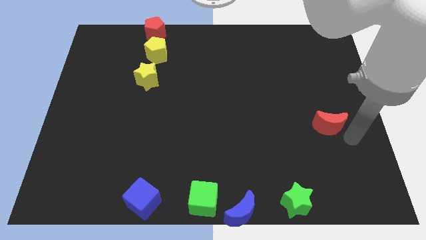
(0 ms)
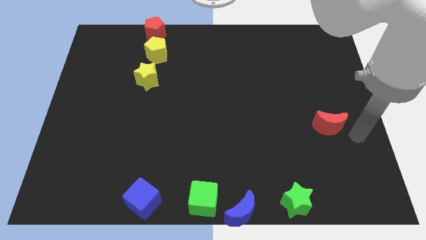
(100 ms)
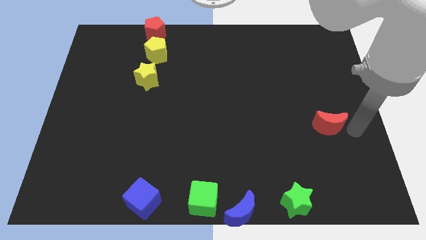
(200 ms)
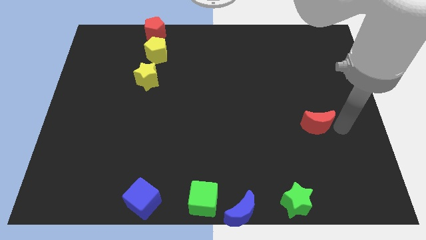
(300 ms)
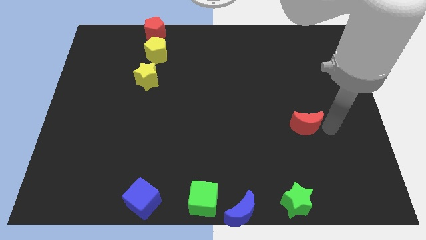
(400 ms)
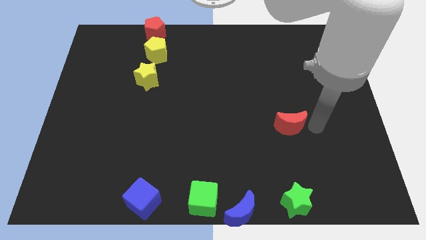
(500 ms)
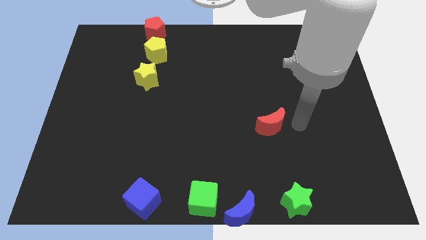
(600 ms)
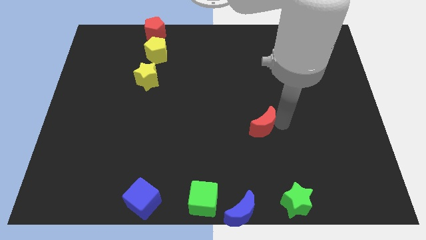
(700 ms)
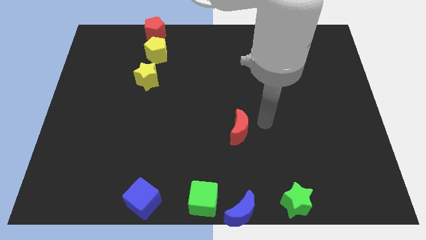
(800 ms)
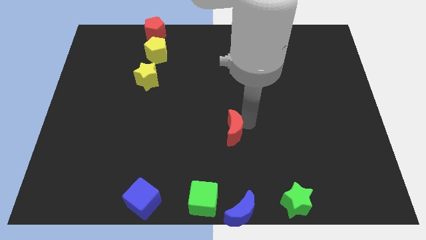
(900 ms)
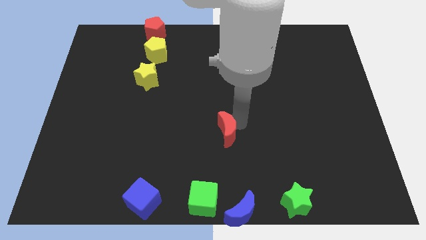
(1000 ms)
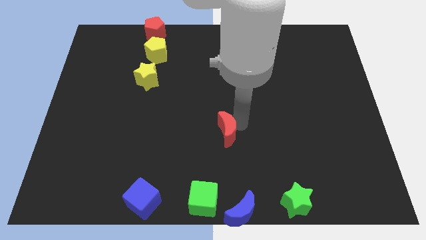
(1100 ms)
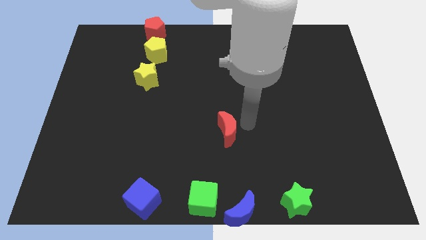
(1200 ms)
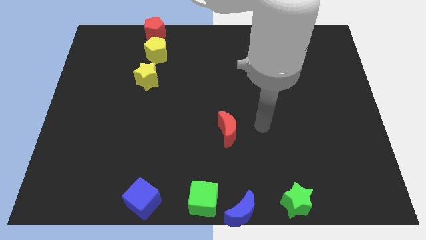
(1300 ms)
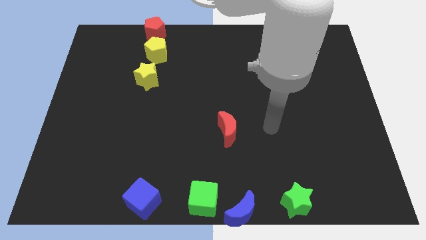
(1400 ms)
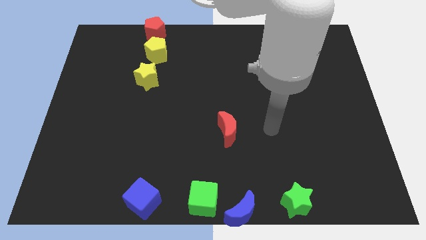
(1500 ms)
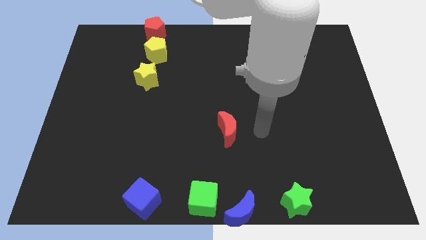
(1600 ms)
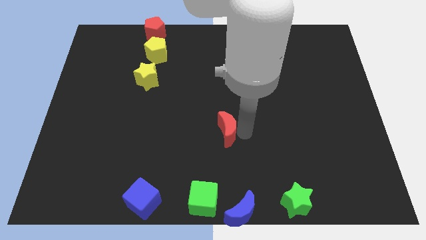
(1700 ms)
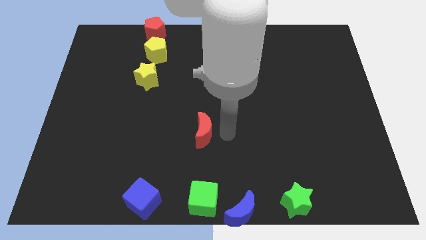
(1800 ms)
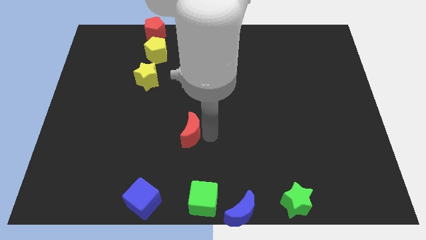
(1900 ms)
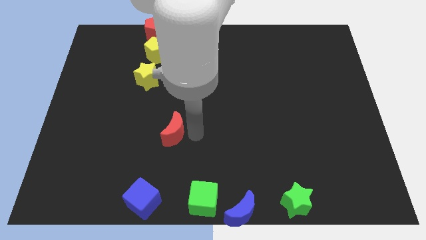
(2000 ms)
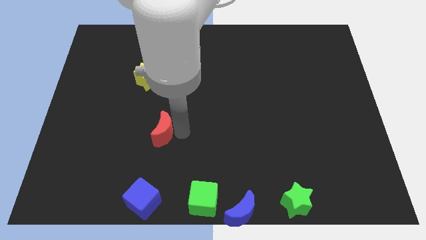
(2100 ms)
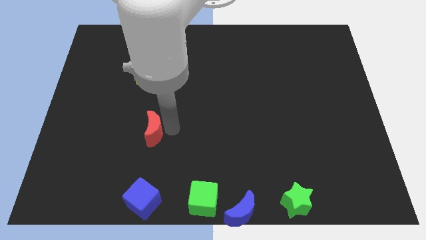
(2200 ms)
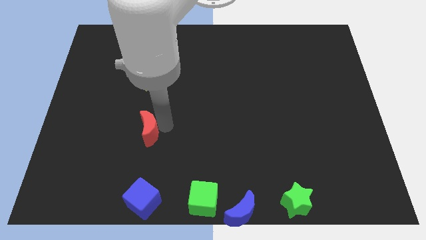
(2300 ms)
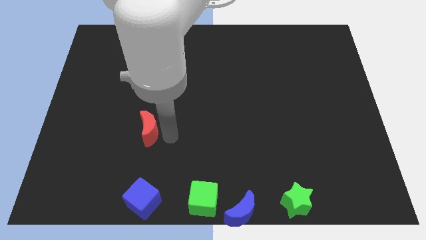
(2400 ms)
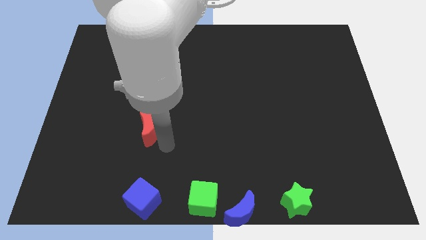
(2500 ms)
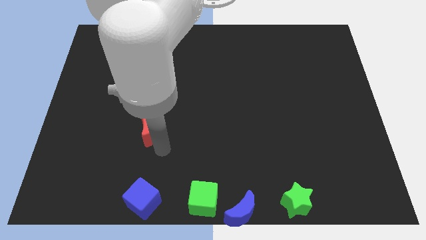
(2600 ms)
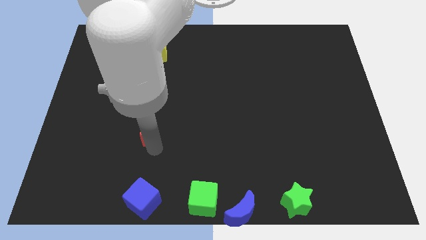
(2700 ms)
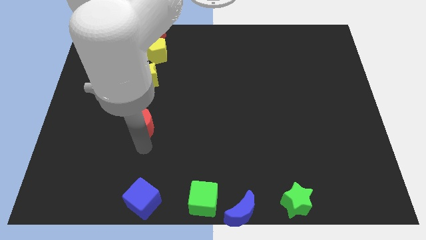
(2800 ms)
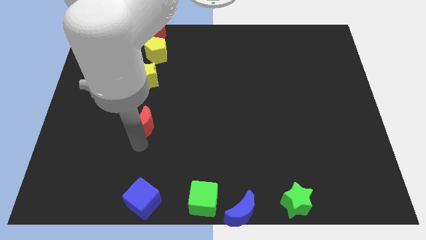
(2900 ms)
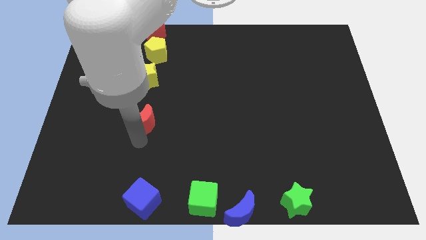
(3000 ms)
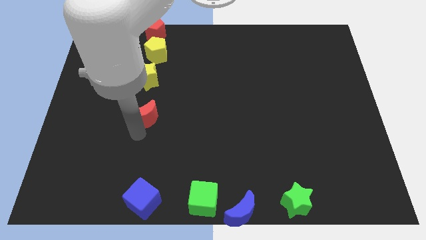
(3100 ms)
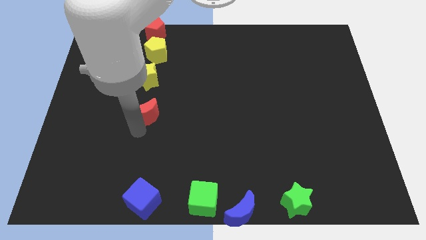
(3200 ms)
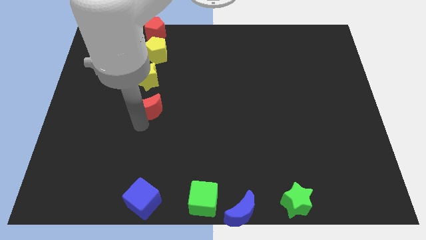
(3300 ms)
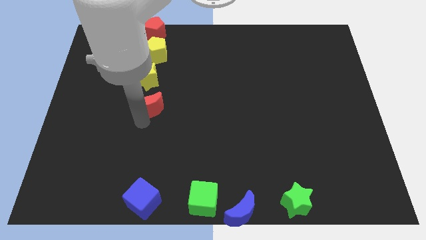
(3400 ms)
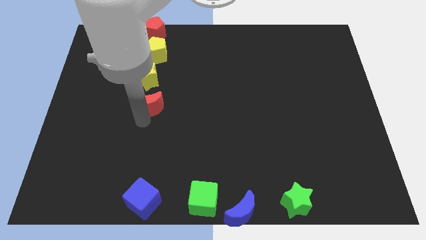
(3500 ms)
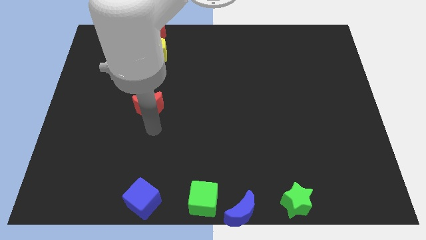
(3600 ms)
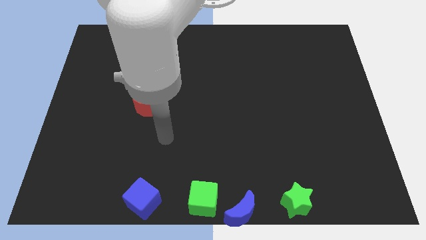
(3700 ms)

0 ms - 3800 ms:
move the red moon towards the bottom of yellow star

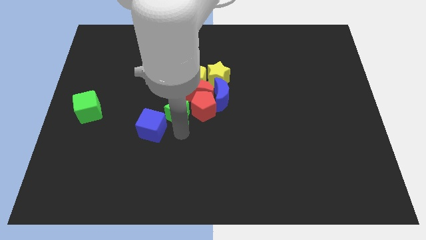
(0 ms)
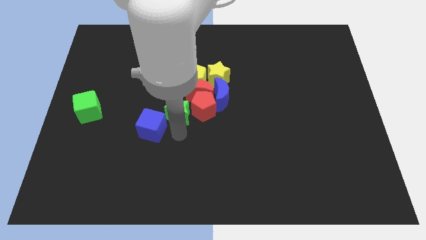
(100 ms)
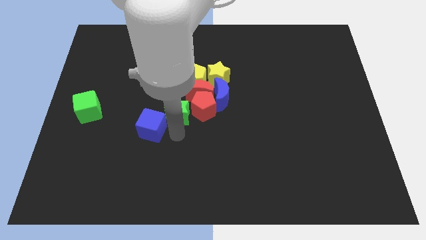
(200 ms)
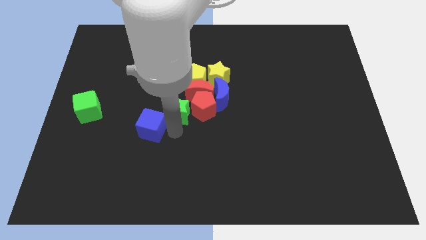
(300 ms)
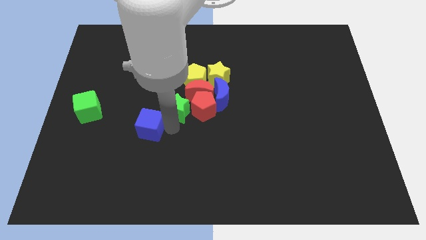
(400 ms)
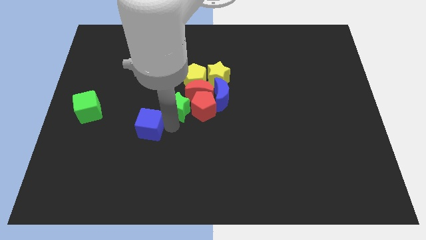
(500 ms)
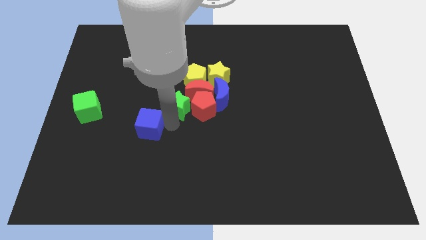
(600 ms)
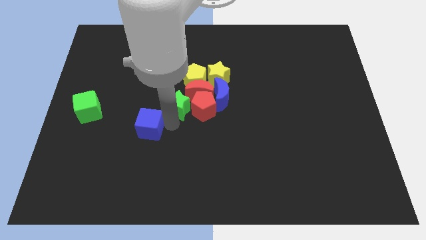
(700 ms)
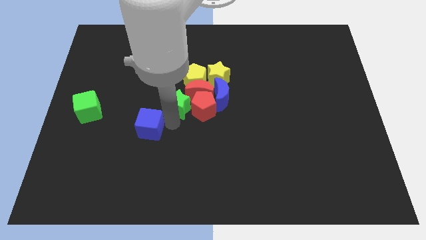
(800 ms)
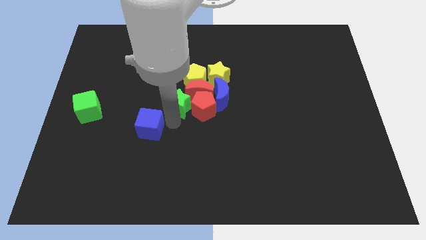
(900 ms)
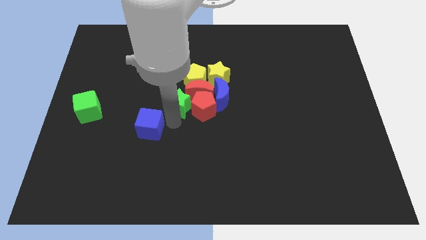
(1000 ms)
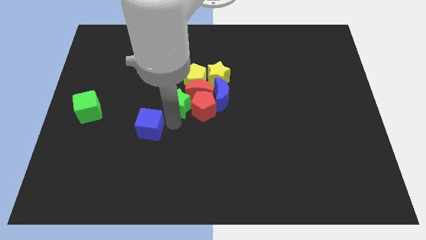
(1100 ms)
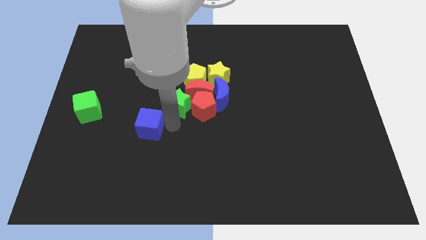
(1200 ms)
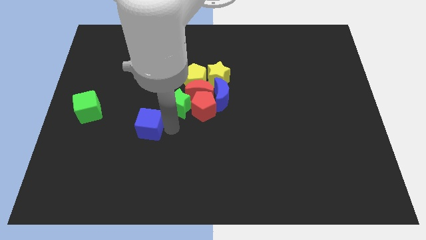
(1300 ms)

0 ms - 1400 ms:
place the green star to the left side of the red pentagon

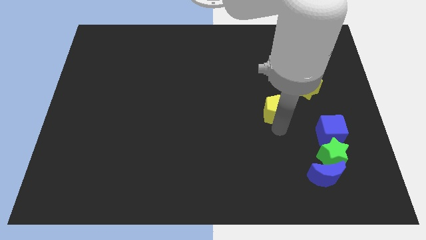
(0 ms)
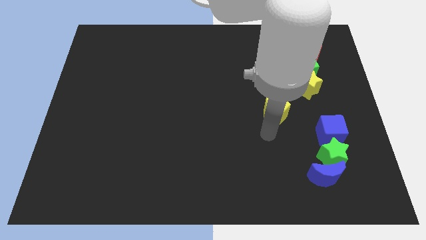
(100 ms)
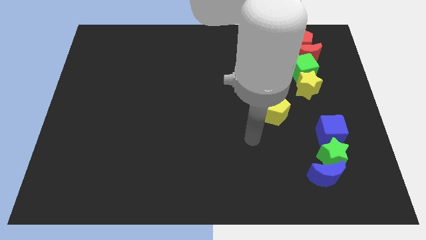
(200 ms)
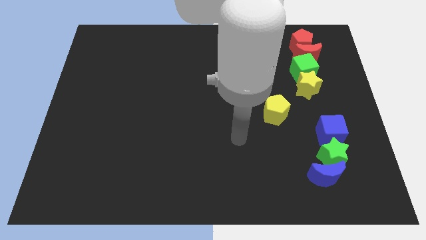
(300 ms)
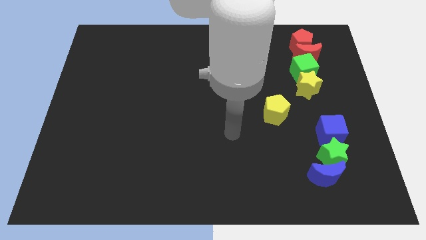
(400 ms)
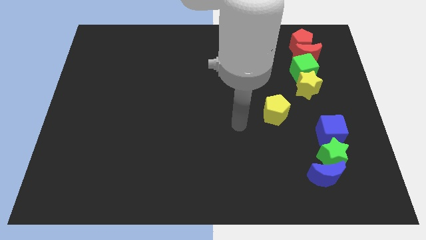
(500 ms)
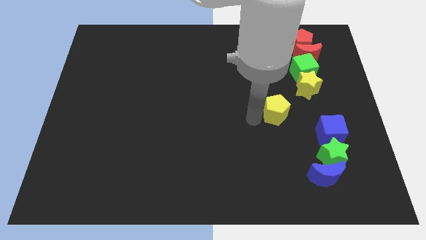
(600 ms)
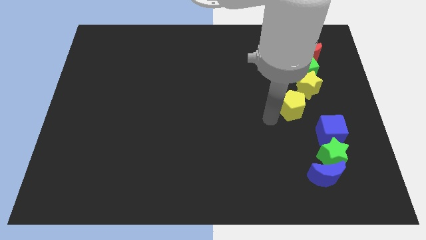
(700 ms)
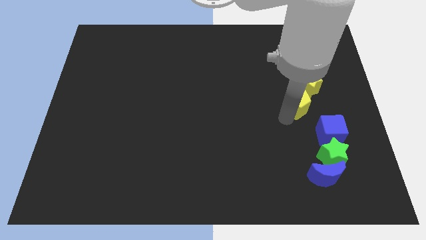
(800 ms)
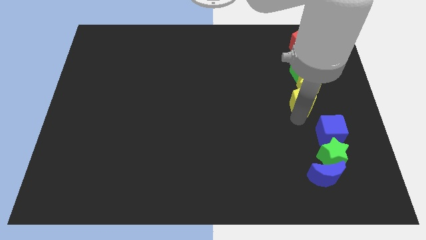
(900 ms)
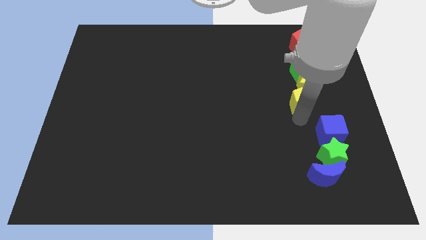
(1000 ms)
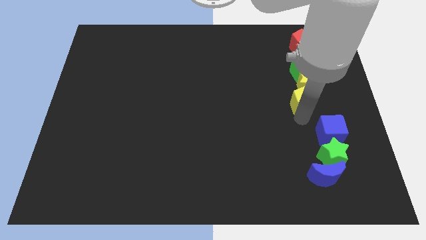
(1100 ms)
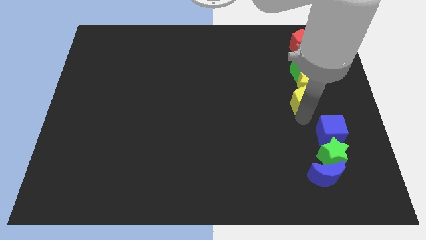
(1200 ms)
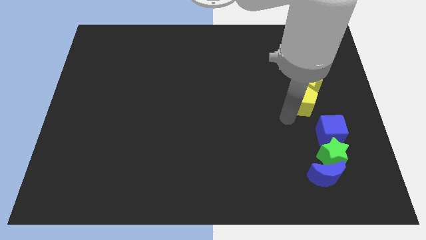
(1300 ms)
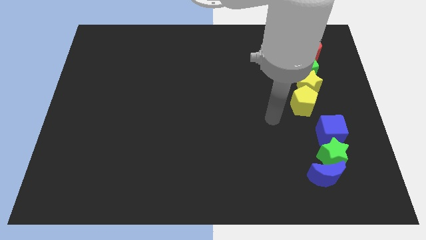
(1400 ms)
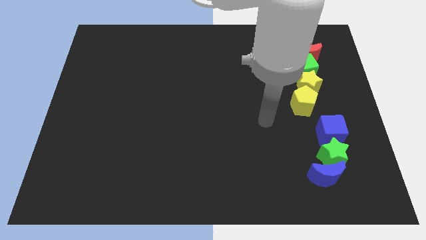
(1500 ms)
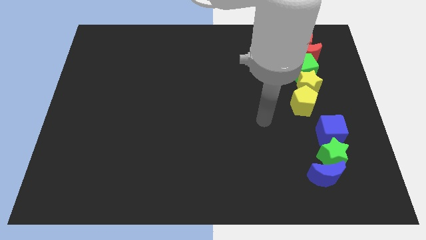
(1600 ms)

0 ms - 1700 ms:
move the yellow pentagon into the yellow star

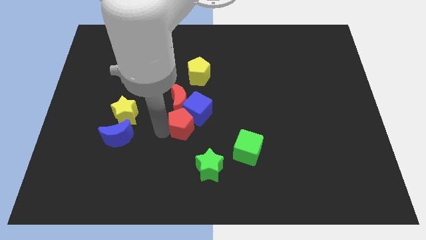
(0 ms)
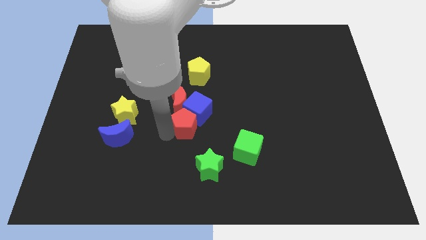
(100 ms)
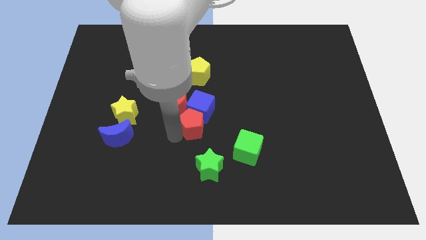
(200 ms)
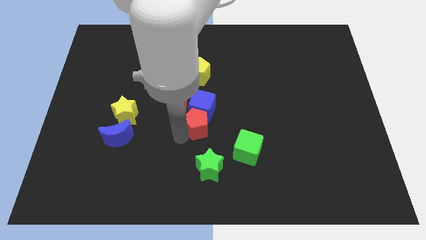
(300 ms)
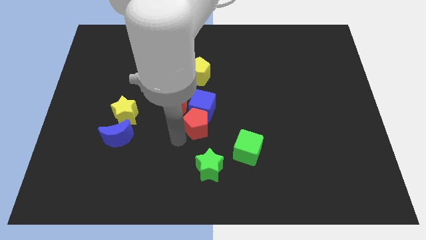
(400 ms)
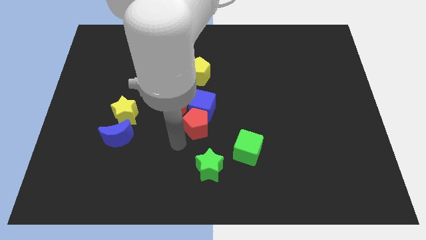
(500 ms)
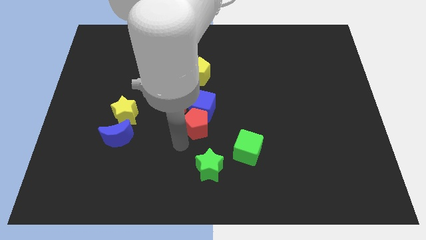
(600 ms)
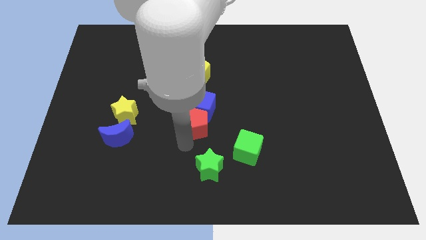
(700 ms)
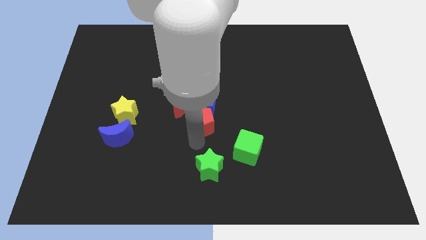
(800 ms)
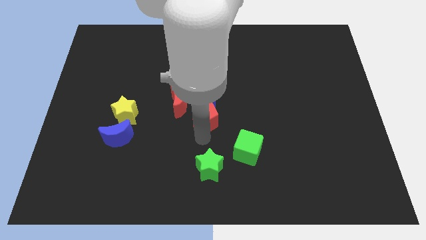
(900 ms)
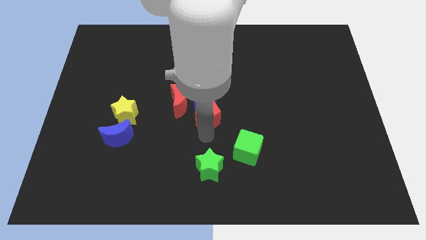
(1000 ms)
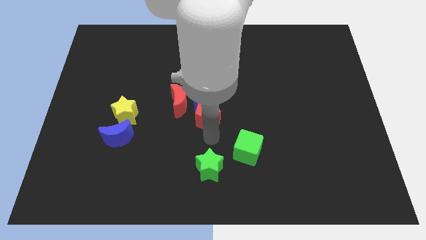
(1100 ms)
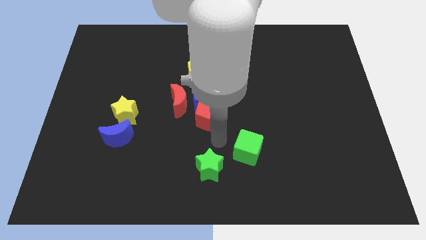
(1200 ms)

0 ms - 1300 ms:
move the blue cube using red pentagon to the center of board

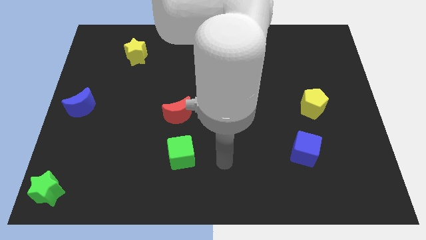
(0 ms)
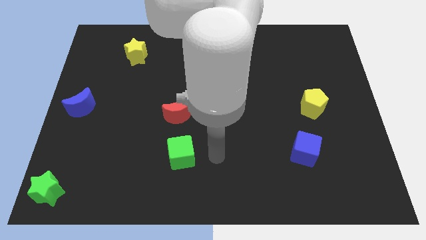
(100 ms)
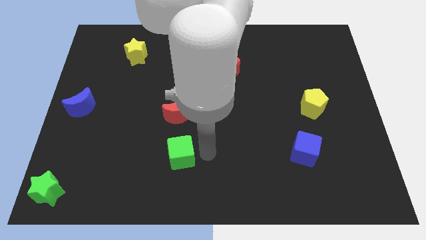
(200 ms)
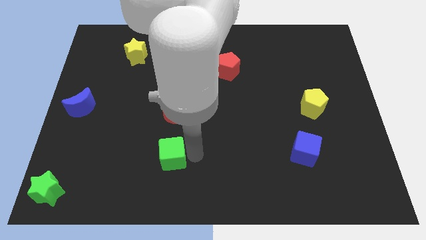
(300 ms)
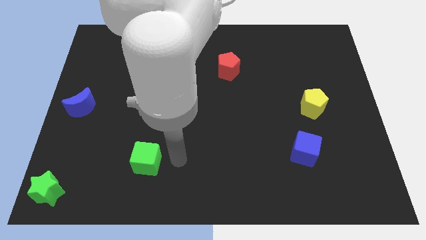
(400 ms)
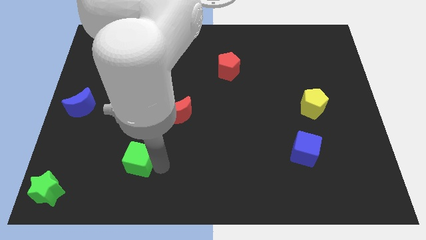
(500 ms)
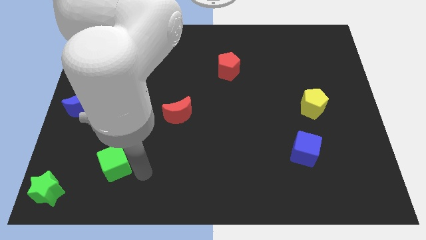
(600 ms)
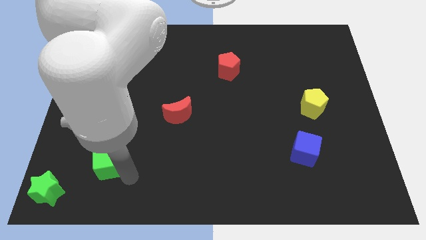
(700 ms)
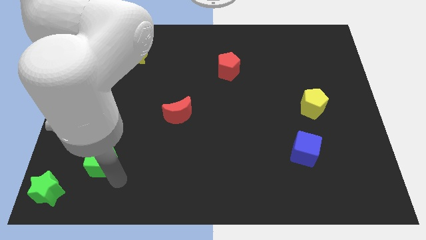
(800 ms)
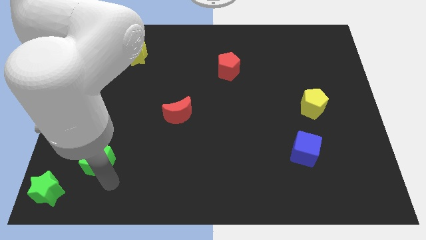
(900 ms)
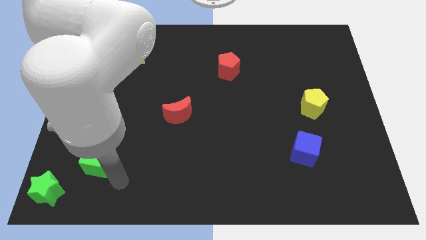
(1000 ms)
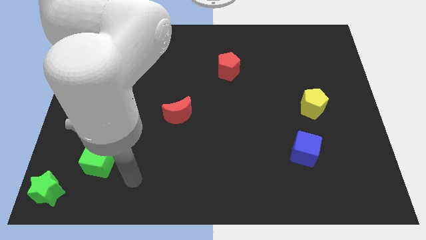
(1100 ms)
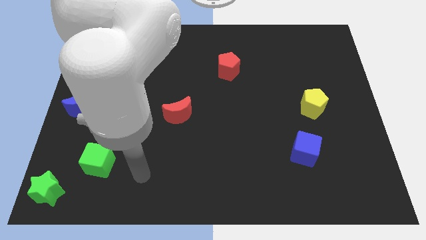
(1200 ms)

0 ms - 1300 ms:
place the green cube in between the green star and red crescent
